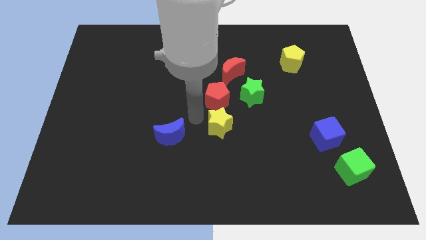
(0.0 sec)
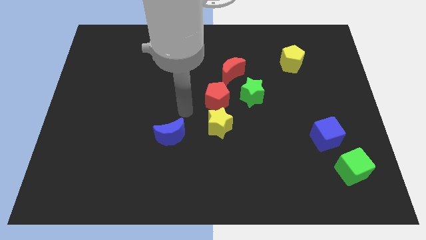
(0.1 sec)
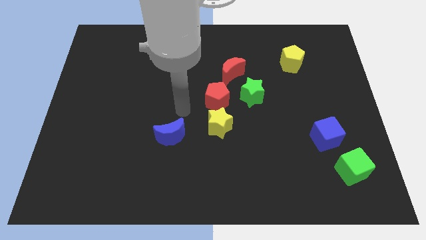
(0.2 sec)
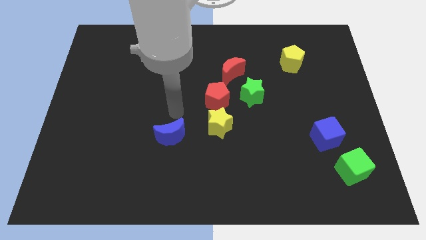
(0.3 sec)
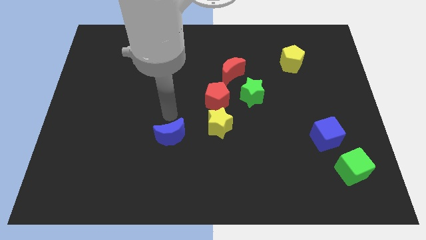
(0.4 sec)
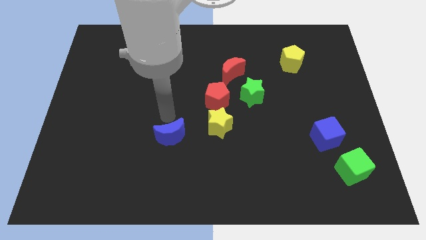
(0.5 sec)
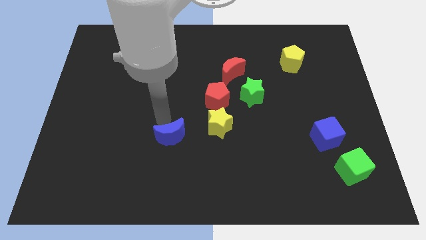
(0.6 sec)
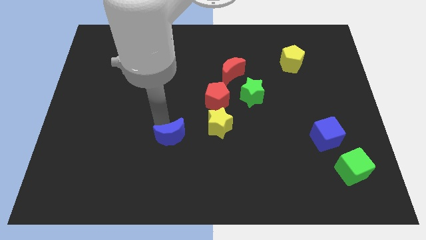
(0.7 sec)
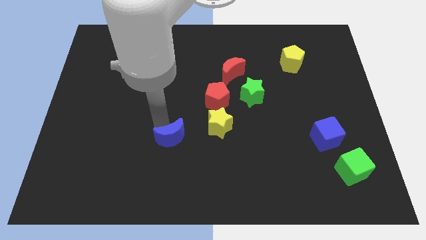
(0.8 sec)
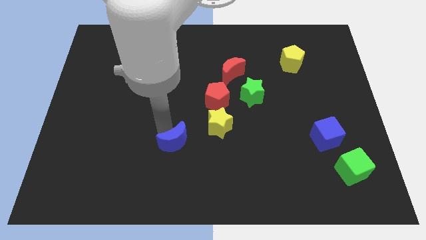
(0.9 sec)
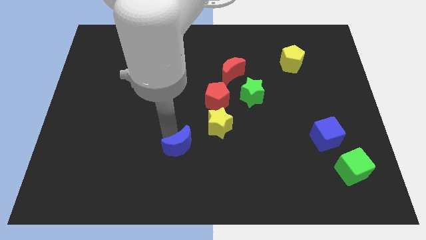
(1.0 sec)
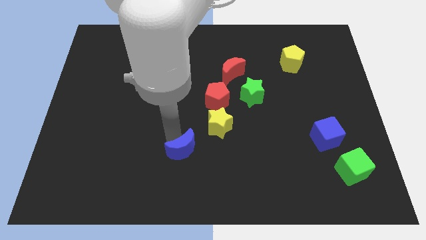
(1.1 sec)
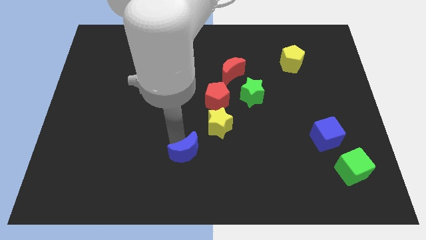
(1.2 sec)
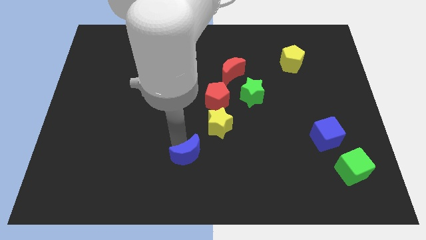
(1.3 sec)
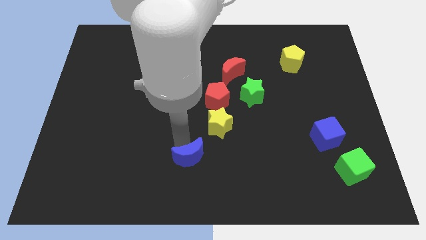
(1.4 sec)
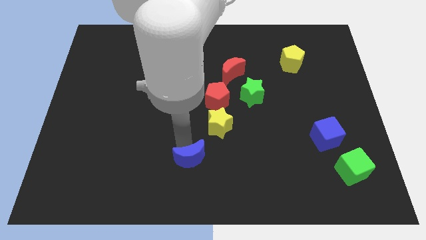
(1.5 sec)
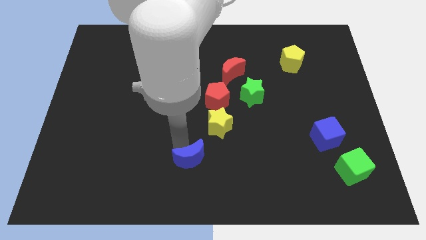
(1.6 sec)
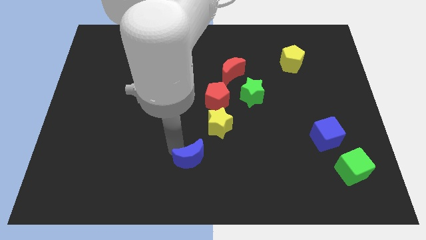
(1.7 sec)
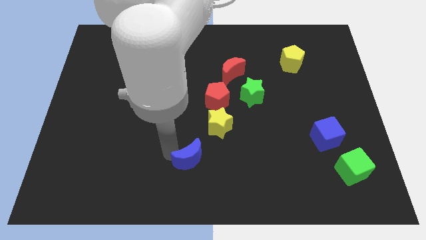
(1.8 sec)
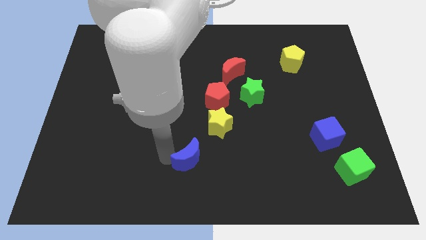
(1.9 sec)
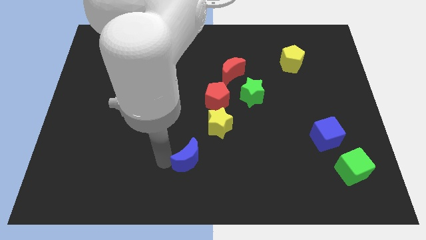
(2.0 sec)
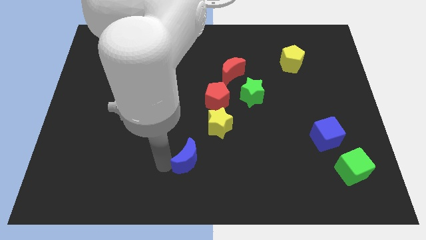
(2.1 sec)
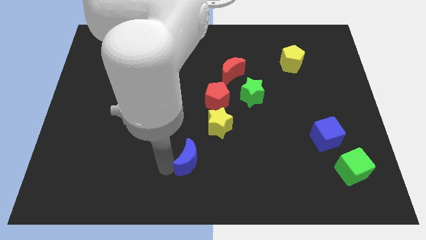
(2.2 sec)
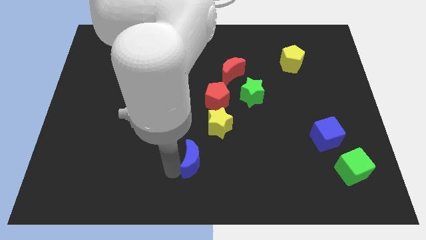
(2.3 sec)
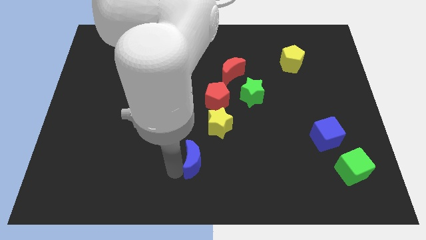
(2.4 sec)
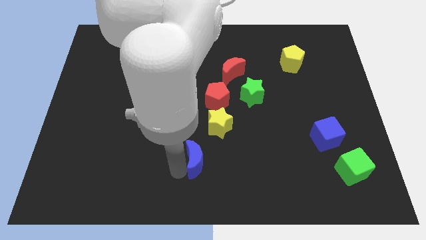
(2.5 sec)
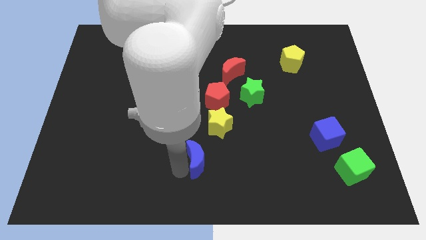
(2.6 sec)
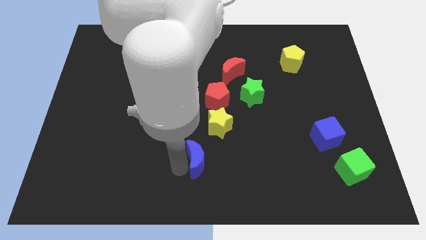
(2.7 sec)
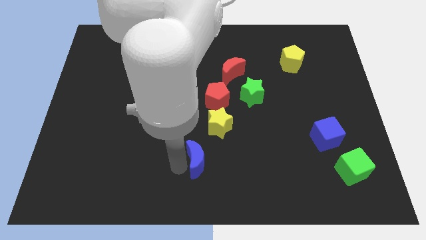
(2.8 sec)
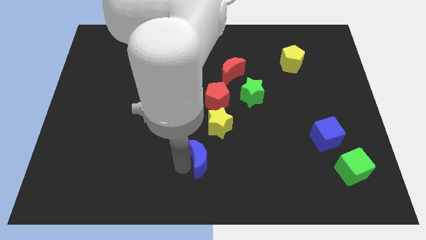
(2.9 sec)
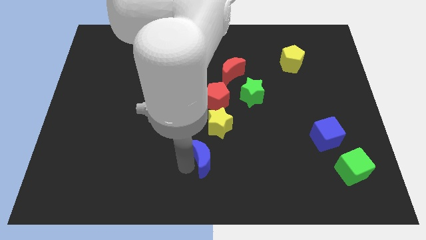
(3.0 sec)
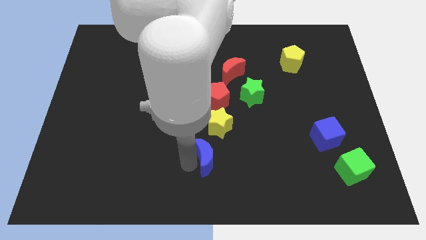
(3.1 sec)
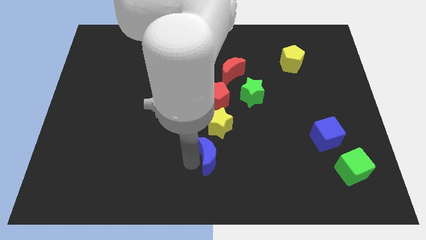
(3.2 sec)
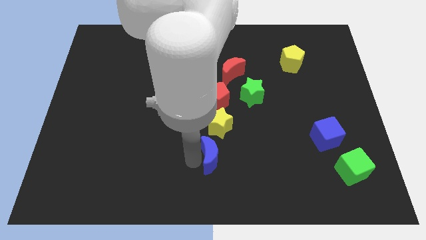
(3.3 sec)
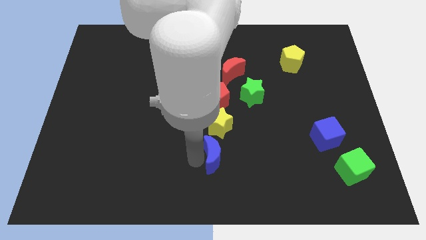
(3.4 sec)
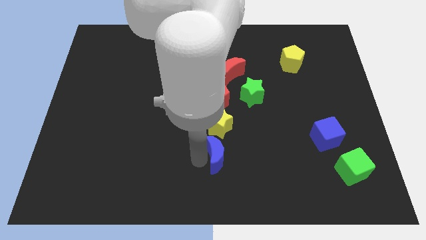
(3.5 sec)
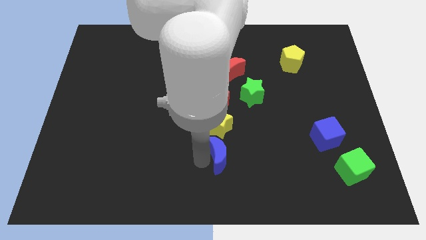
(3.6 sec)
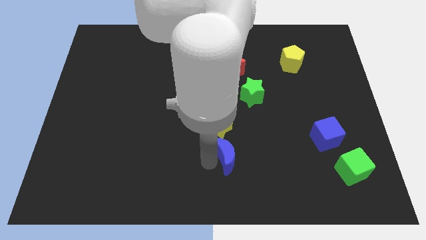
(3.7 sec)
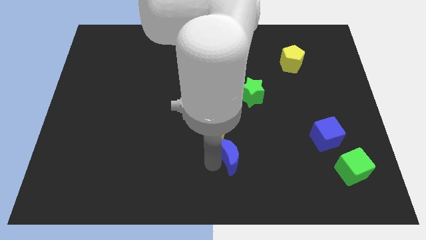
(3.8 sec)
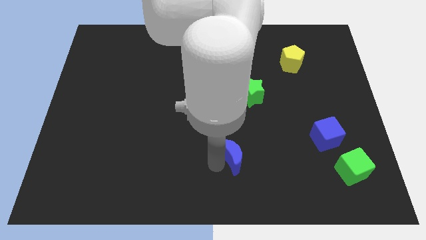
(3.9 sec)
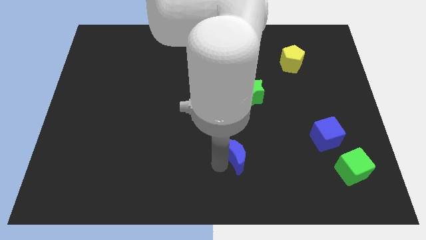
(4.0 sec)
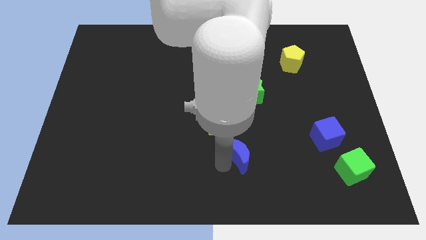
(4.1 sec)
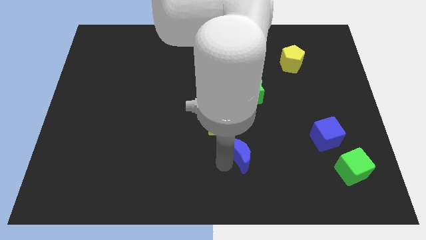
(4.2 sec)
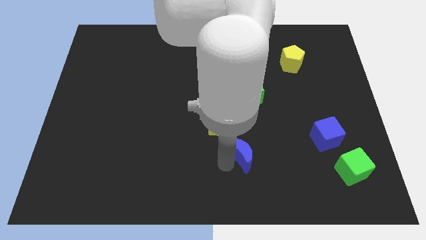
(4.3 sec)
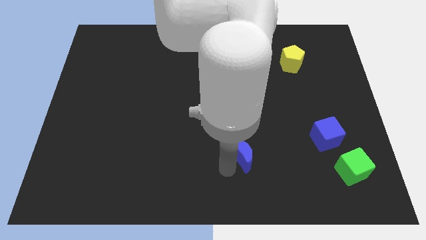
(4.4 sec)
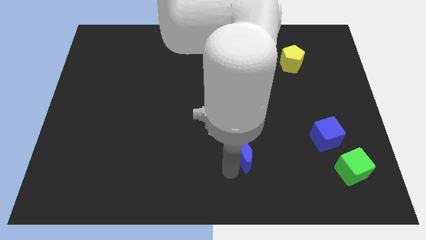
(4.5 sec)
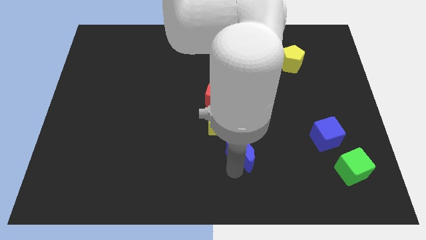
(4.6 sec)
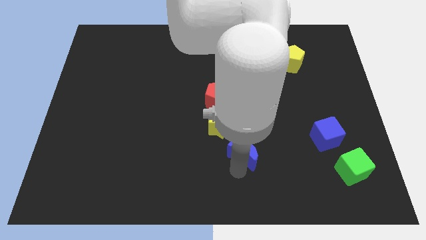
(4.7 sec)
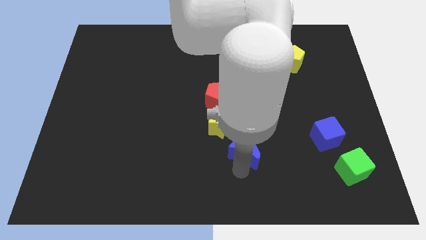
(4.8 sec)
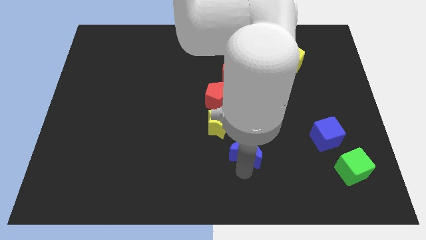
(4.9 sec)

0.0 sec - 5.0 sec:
push the blue crescent below the yellow star

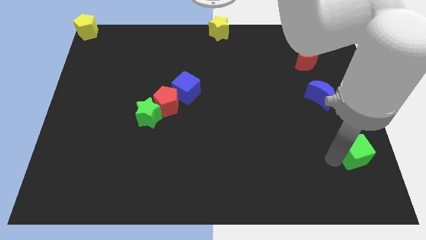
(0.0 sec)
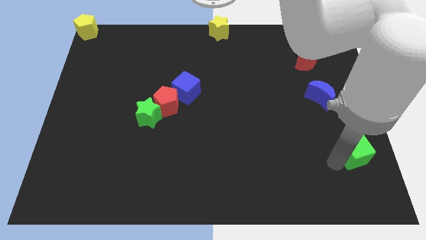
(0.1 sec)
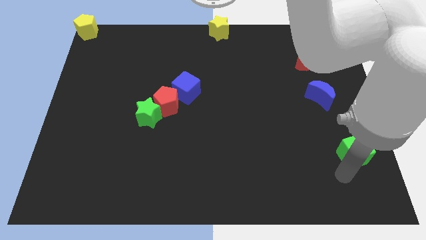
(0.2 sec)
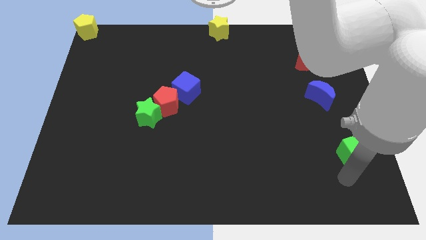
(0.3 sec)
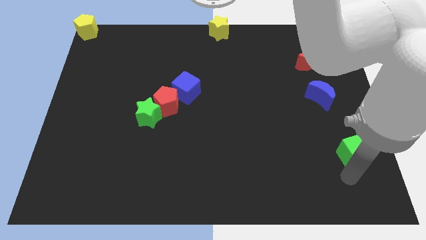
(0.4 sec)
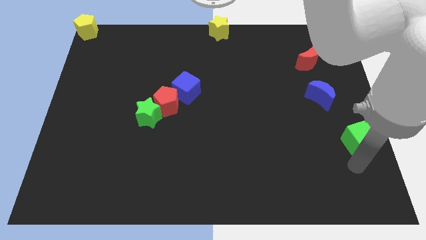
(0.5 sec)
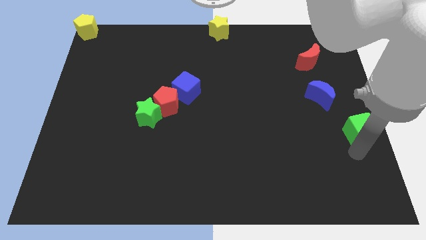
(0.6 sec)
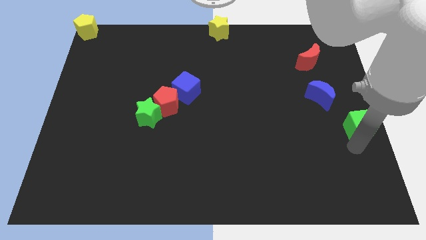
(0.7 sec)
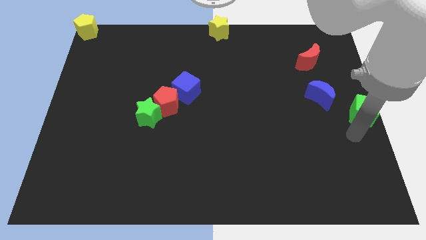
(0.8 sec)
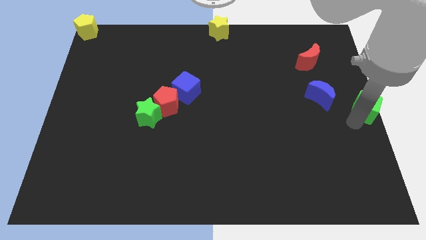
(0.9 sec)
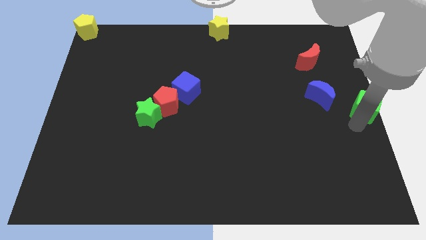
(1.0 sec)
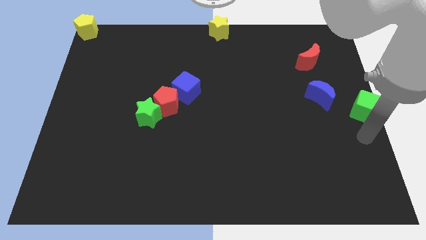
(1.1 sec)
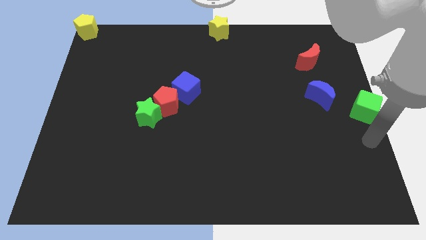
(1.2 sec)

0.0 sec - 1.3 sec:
push green cube to center right

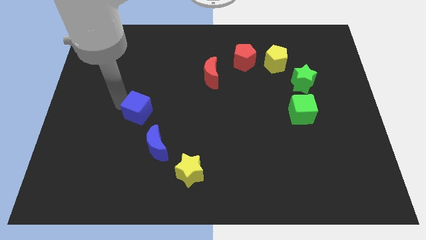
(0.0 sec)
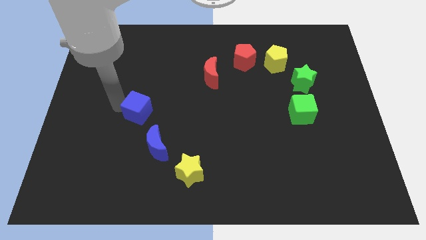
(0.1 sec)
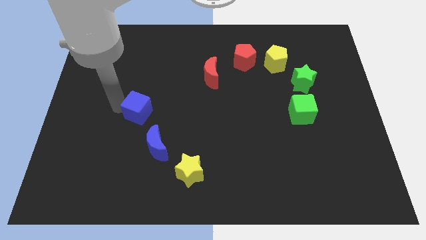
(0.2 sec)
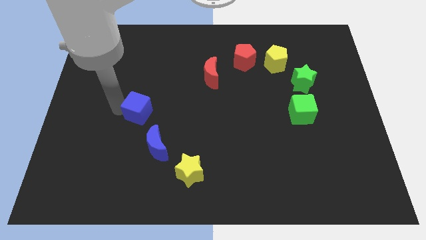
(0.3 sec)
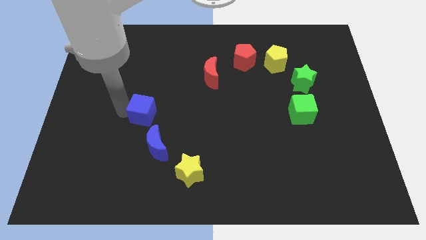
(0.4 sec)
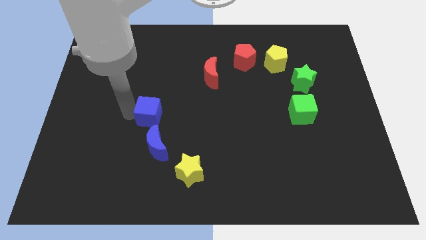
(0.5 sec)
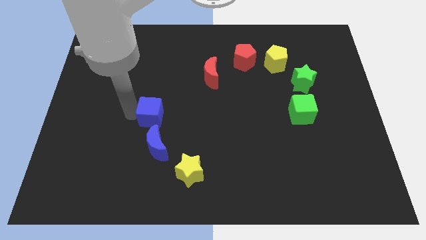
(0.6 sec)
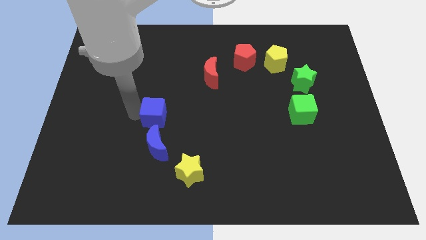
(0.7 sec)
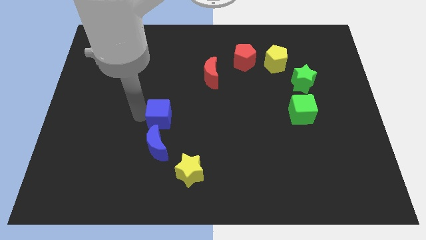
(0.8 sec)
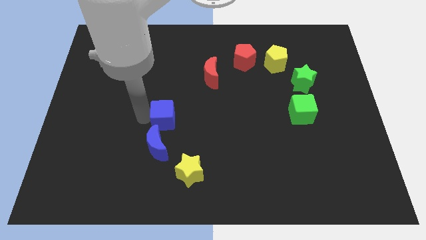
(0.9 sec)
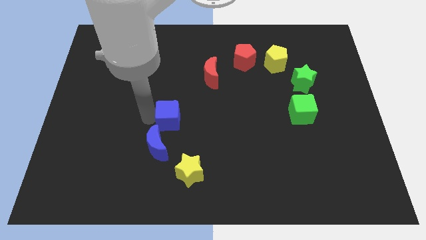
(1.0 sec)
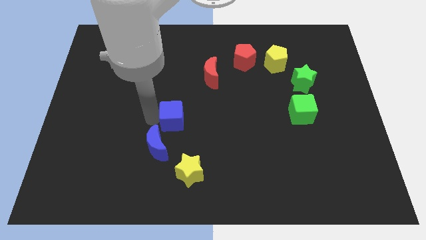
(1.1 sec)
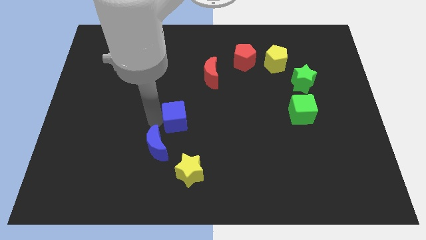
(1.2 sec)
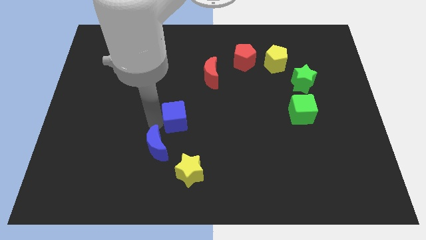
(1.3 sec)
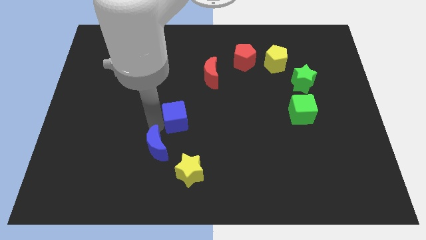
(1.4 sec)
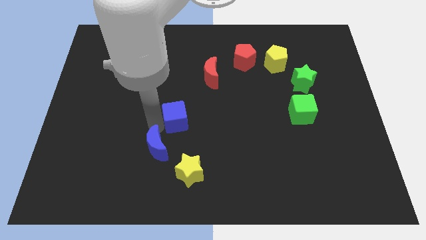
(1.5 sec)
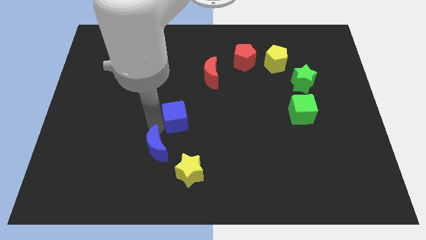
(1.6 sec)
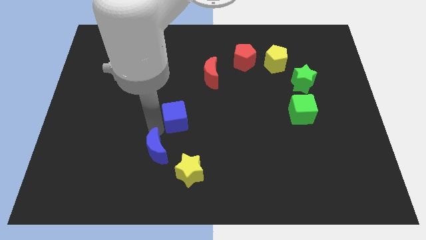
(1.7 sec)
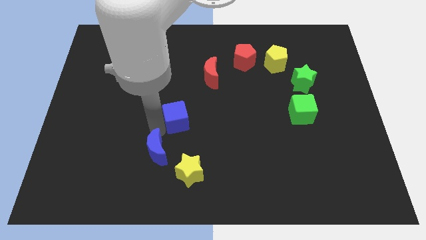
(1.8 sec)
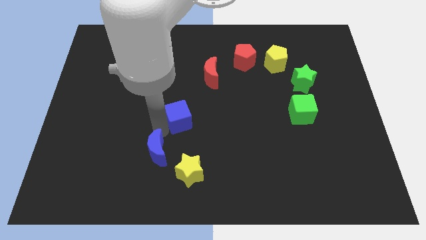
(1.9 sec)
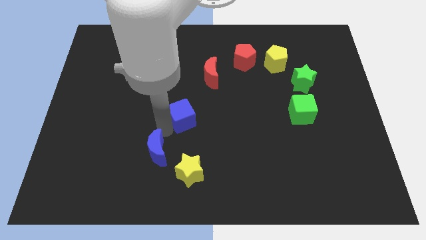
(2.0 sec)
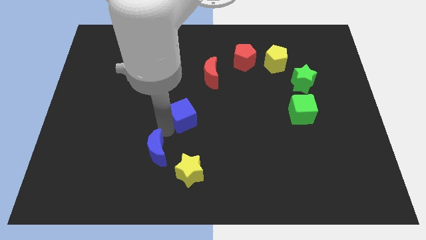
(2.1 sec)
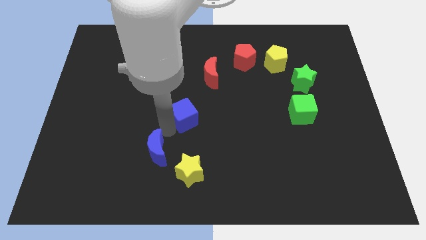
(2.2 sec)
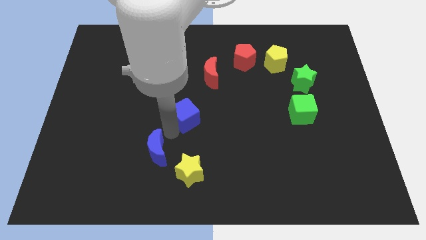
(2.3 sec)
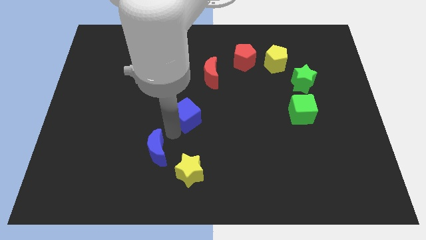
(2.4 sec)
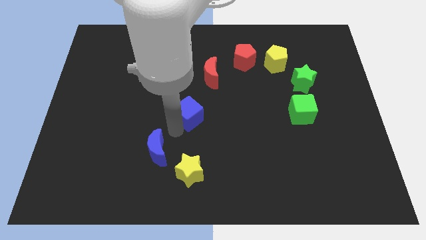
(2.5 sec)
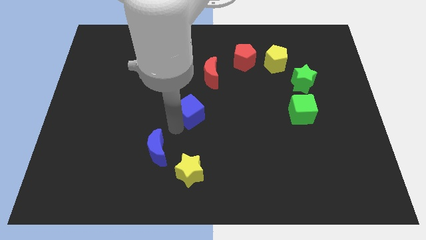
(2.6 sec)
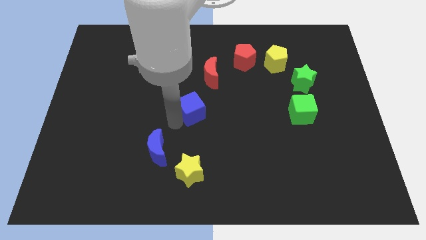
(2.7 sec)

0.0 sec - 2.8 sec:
move the blue cube to the top of the yellow star
